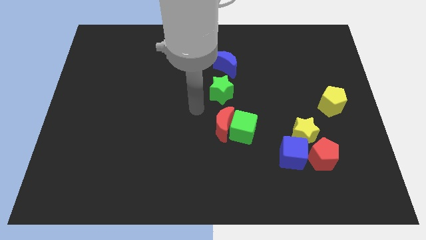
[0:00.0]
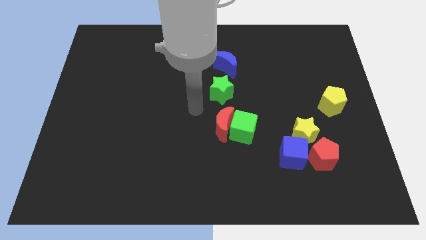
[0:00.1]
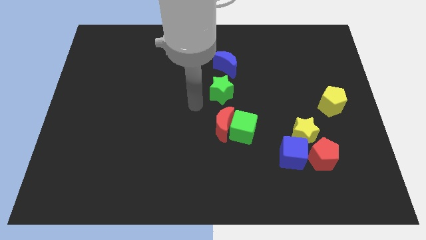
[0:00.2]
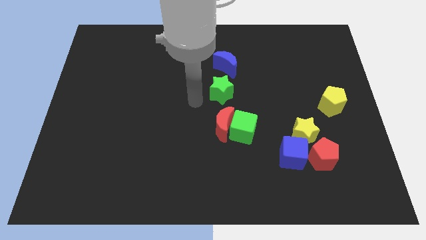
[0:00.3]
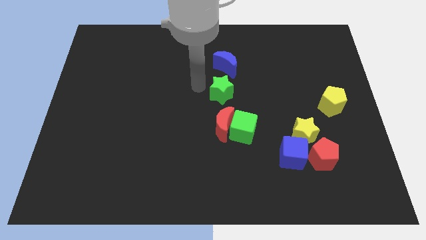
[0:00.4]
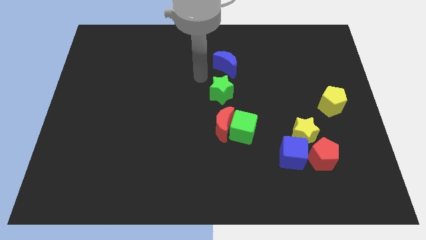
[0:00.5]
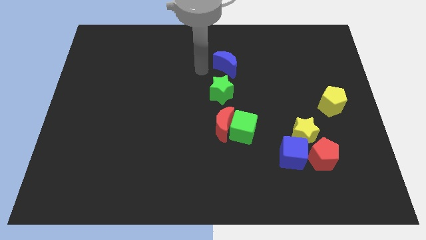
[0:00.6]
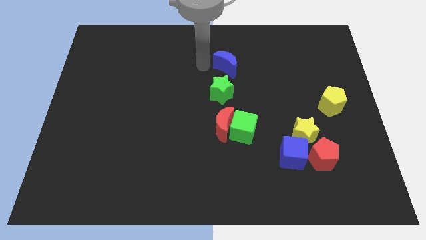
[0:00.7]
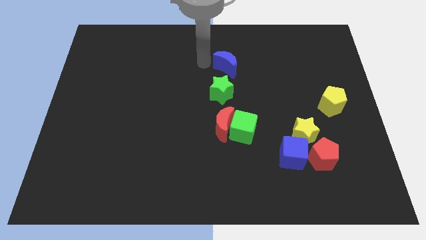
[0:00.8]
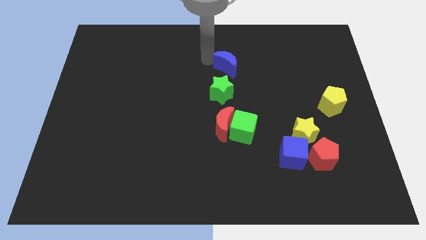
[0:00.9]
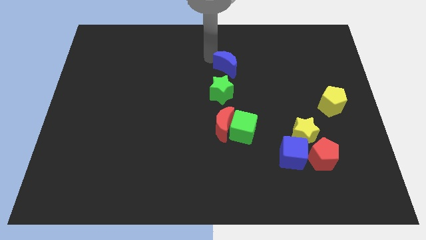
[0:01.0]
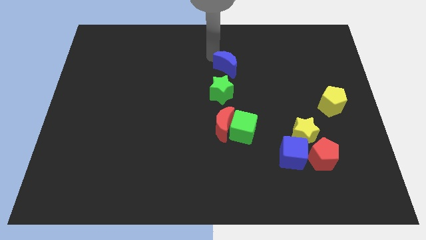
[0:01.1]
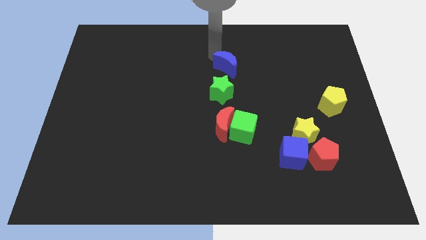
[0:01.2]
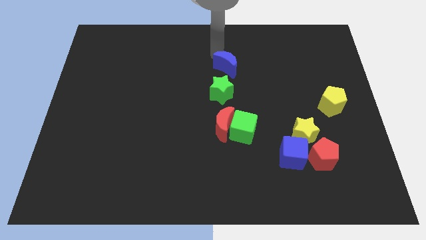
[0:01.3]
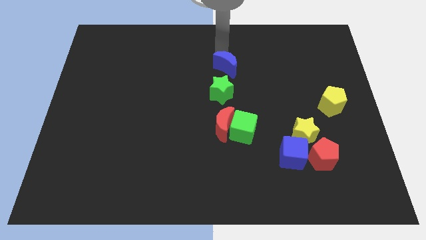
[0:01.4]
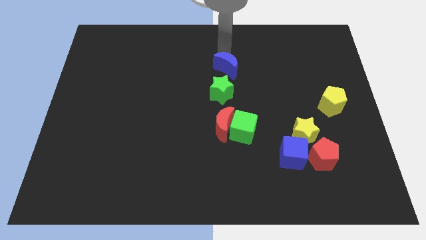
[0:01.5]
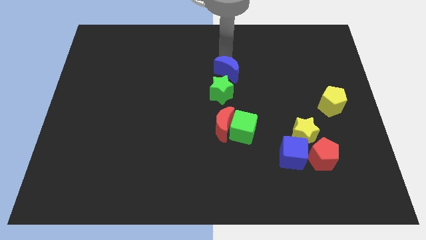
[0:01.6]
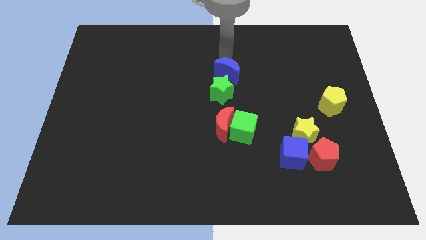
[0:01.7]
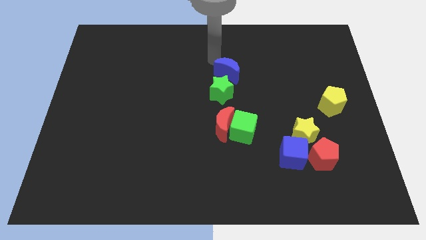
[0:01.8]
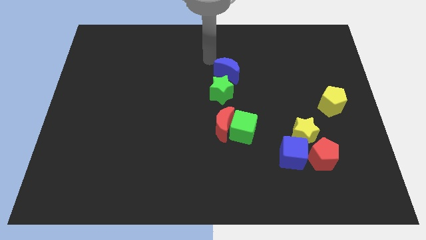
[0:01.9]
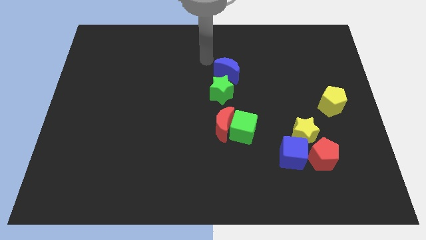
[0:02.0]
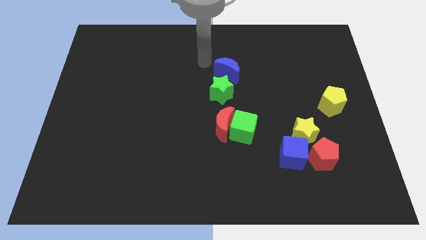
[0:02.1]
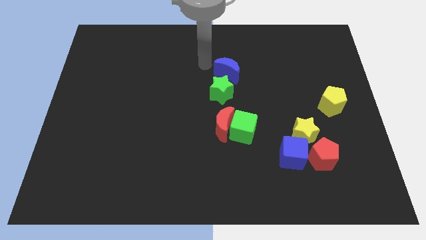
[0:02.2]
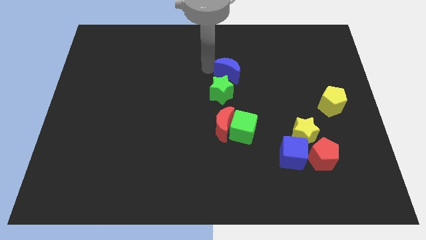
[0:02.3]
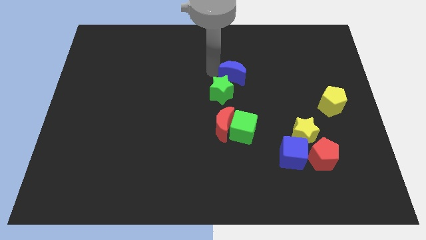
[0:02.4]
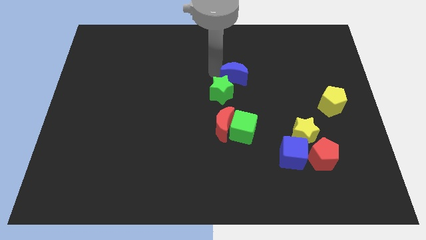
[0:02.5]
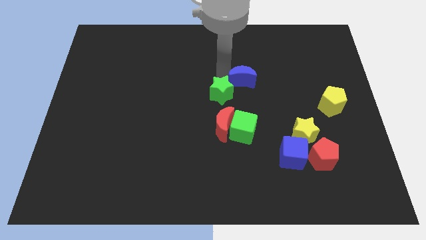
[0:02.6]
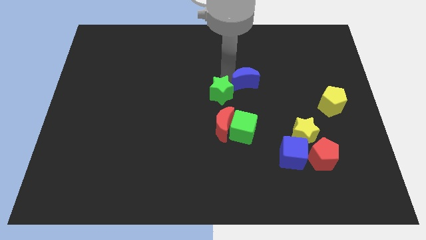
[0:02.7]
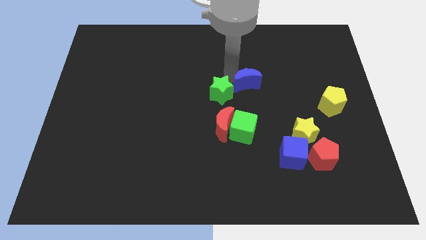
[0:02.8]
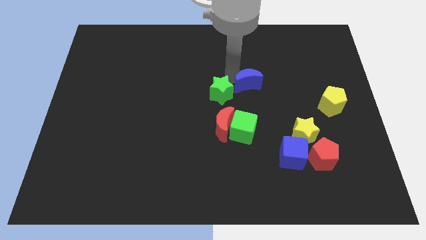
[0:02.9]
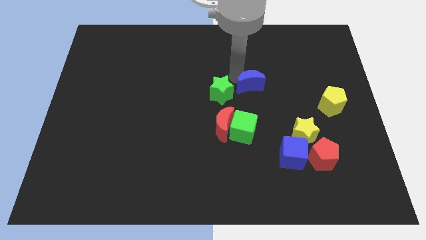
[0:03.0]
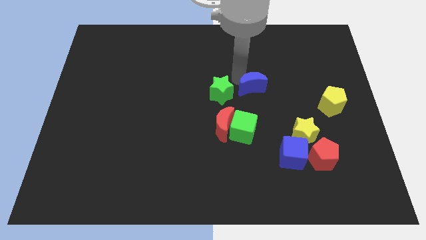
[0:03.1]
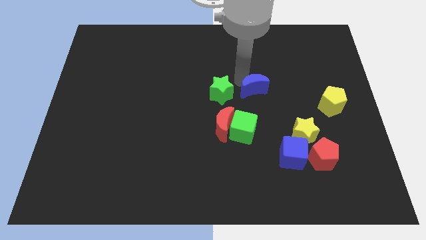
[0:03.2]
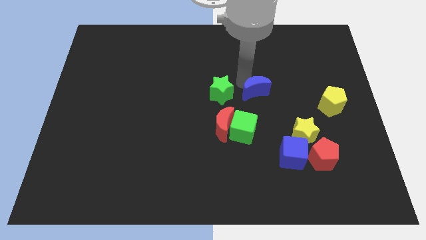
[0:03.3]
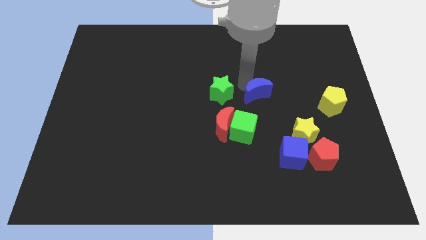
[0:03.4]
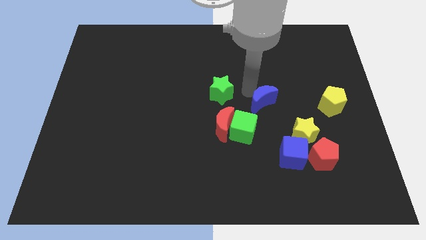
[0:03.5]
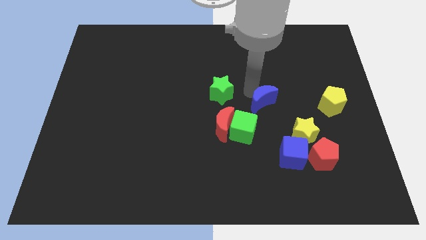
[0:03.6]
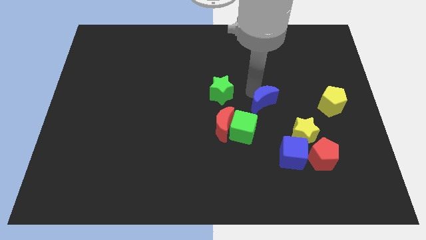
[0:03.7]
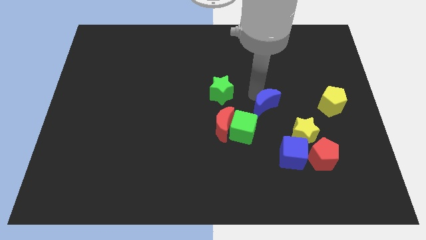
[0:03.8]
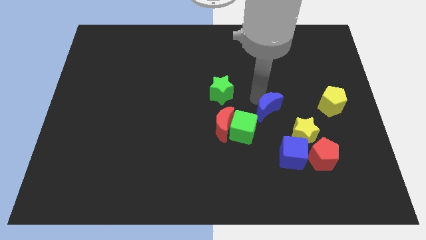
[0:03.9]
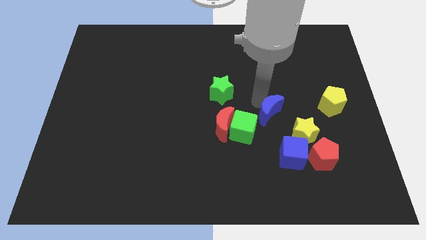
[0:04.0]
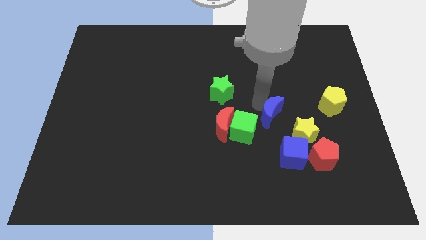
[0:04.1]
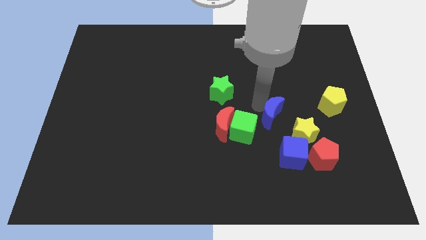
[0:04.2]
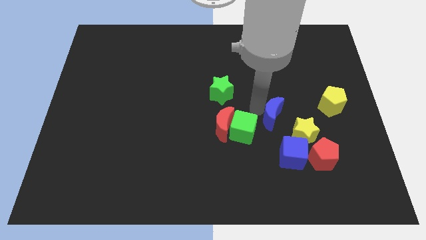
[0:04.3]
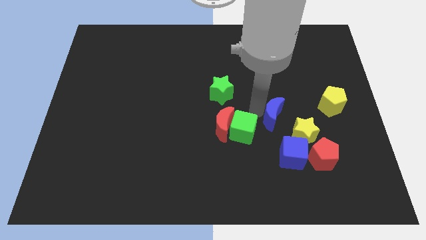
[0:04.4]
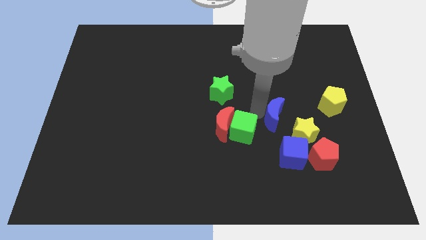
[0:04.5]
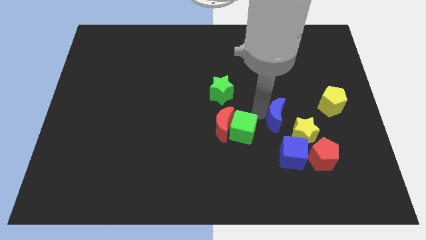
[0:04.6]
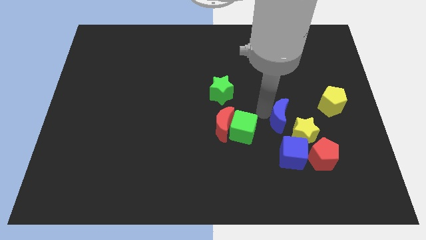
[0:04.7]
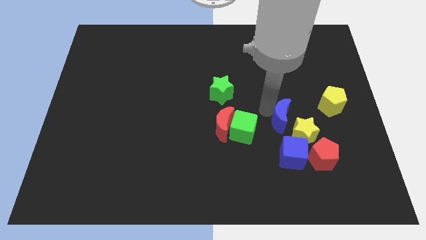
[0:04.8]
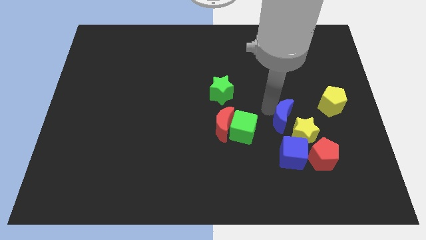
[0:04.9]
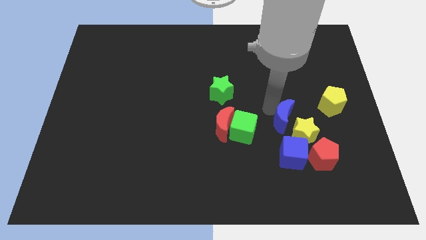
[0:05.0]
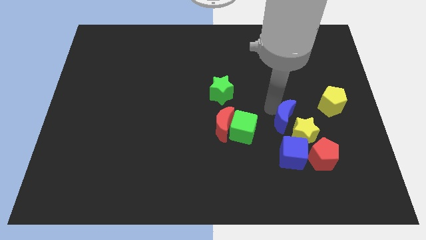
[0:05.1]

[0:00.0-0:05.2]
push the blue moon towards the yellow star

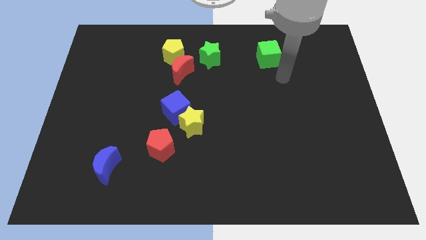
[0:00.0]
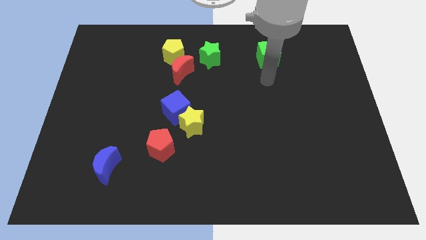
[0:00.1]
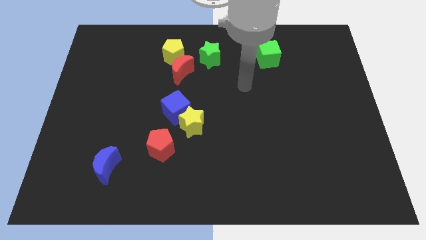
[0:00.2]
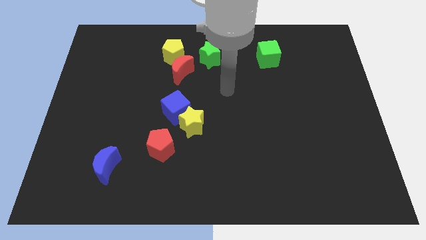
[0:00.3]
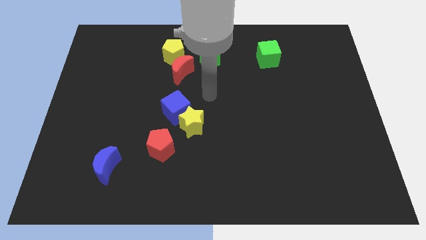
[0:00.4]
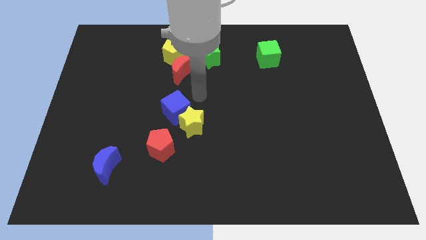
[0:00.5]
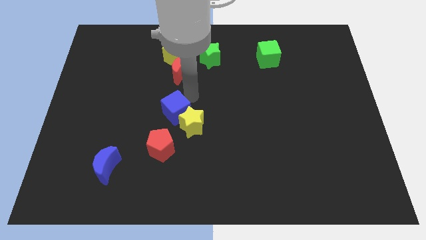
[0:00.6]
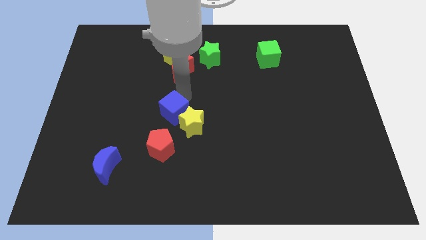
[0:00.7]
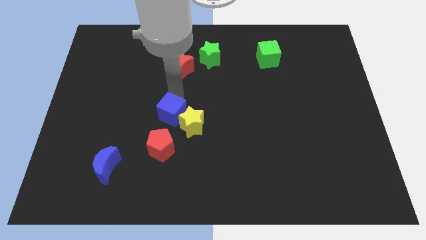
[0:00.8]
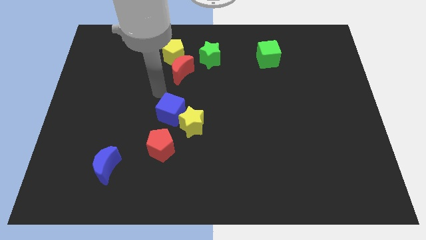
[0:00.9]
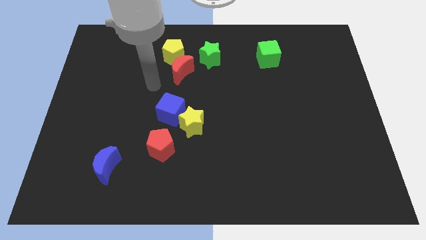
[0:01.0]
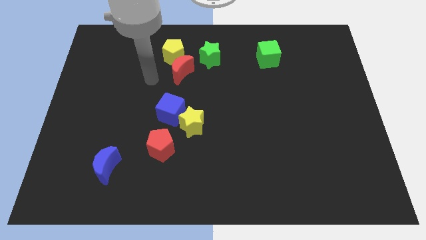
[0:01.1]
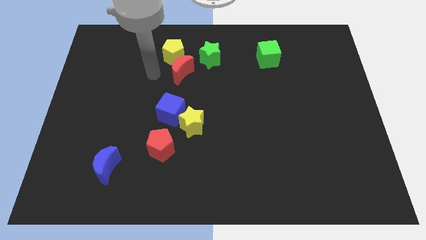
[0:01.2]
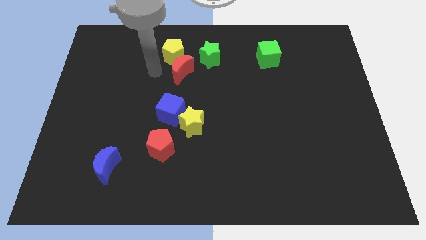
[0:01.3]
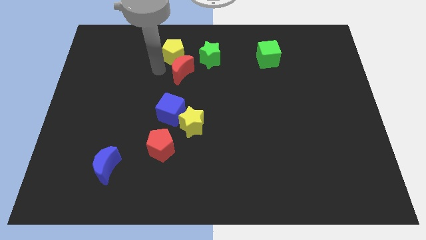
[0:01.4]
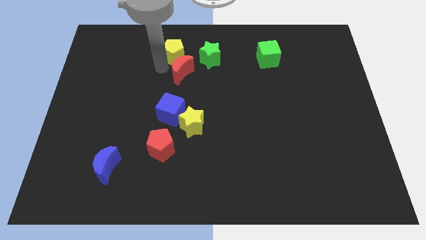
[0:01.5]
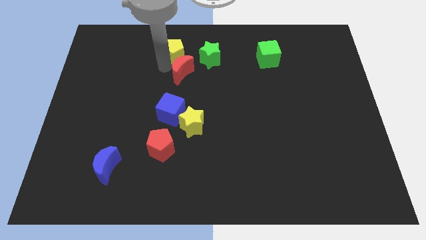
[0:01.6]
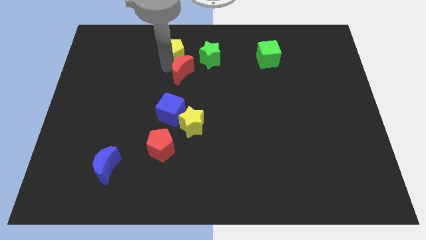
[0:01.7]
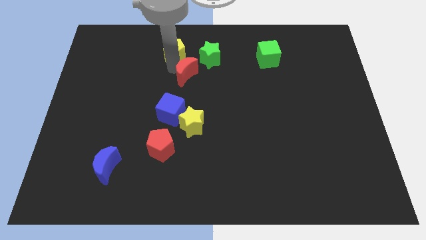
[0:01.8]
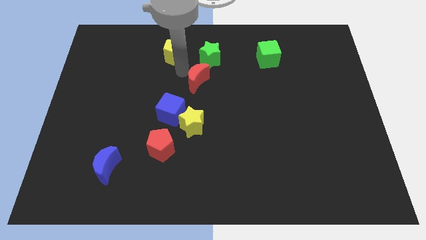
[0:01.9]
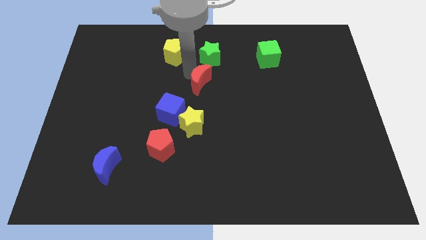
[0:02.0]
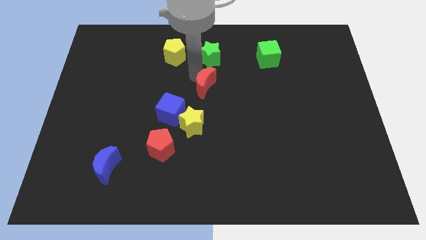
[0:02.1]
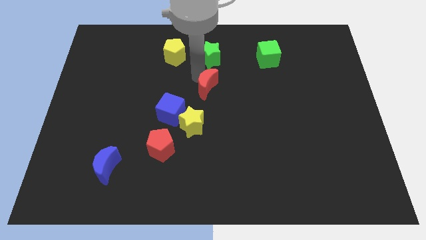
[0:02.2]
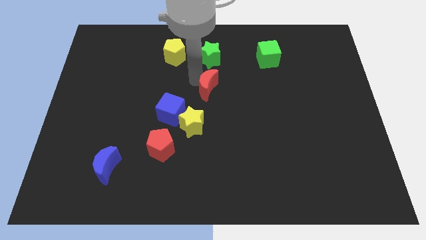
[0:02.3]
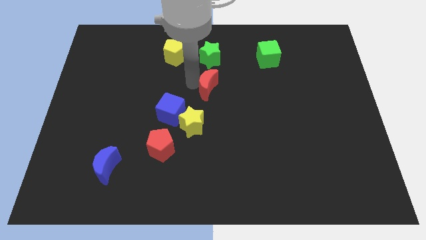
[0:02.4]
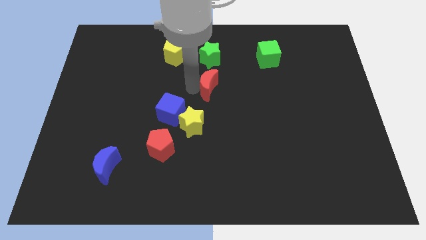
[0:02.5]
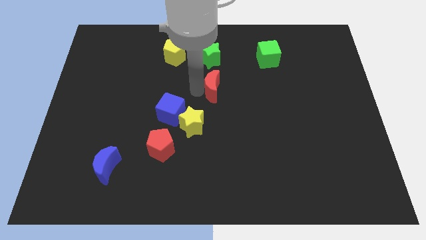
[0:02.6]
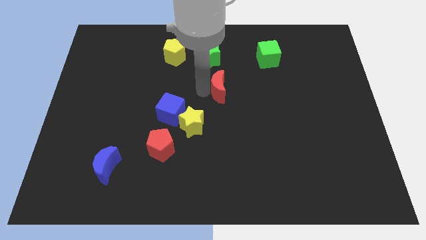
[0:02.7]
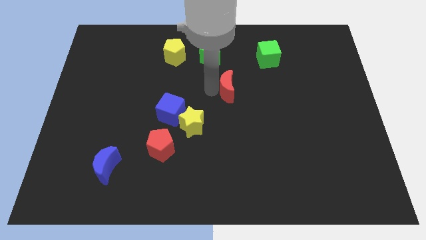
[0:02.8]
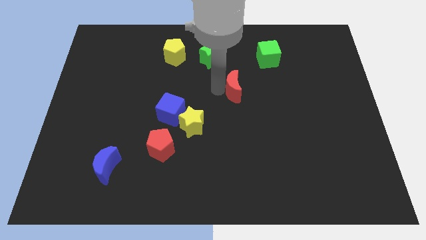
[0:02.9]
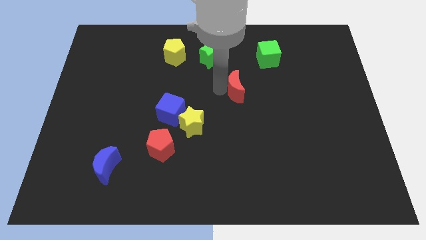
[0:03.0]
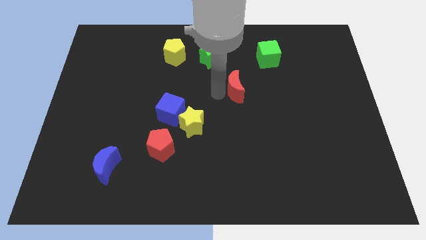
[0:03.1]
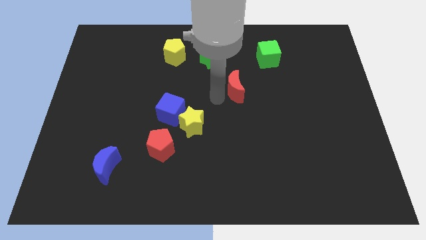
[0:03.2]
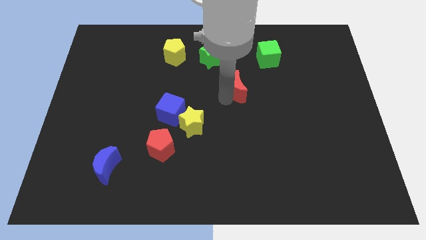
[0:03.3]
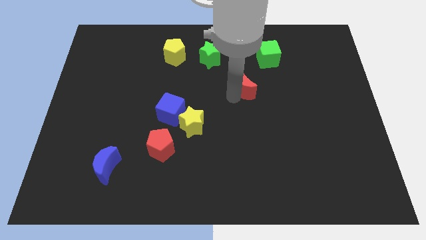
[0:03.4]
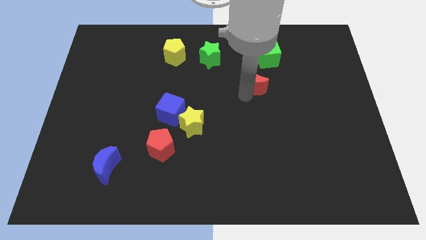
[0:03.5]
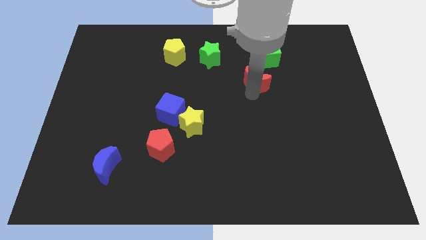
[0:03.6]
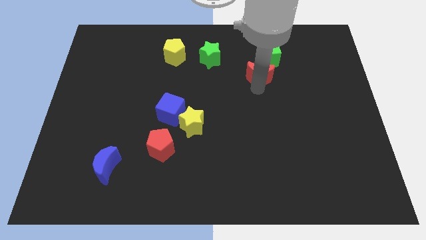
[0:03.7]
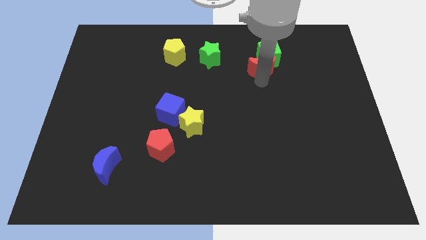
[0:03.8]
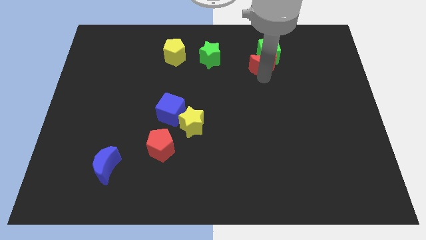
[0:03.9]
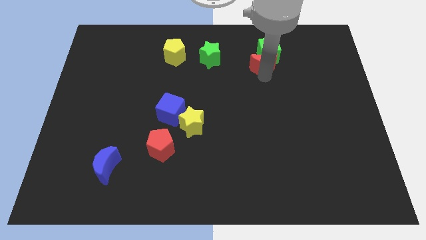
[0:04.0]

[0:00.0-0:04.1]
move the red moon close to the green cube
